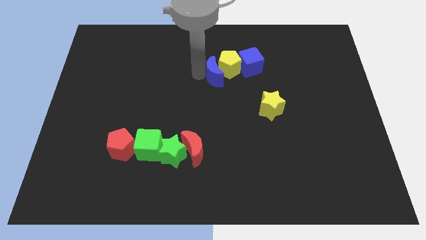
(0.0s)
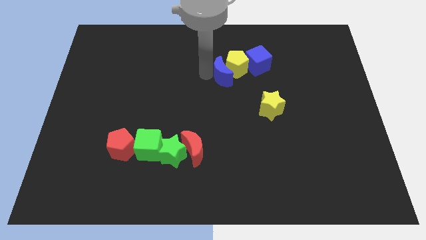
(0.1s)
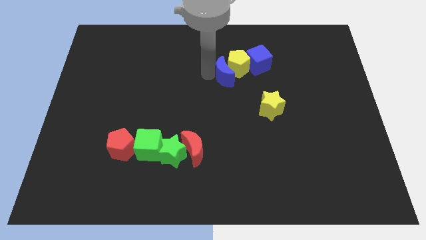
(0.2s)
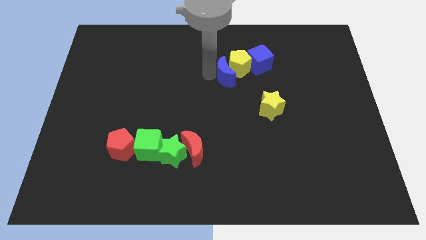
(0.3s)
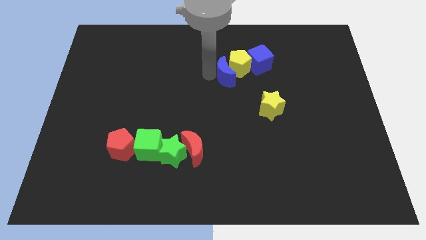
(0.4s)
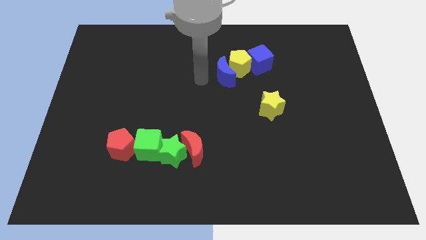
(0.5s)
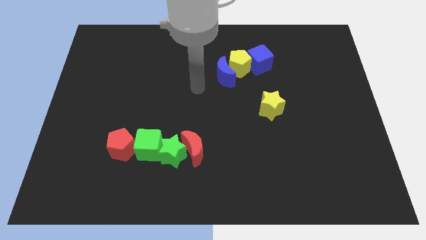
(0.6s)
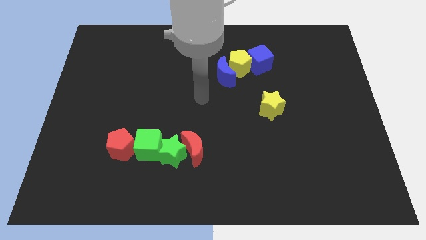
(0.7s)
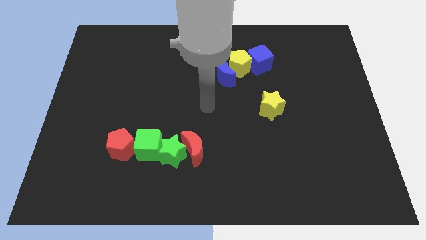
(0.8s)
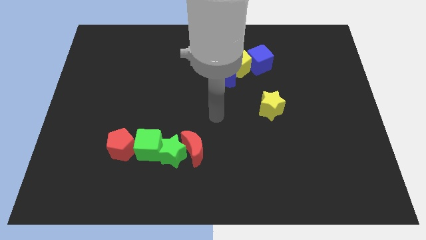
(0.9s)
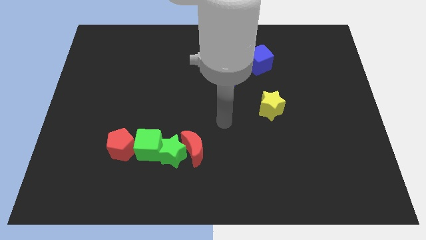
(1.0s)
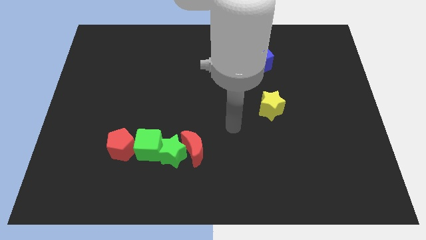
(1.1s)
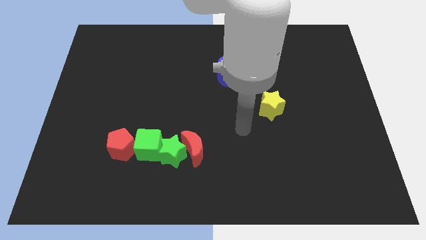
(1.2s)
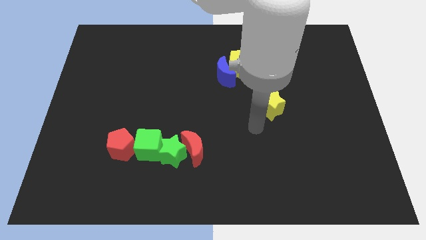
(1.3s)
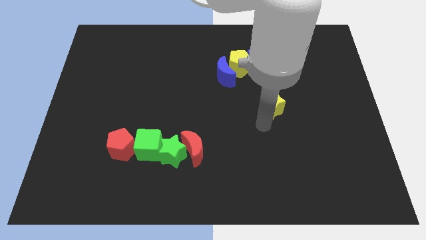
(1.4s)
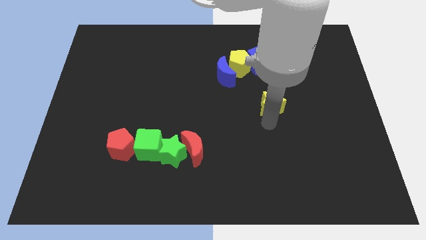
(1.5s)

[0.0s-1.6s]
point your arm to the bottom of the yellow star

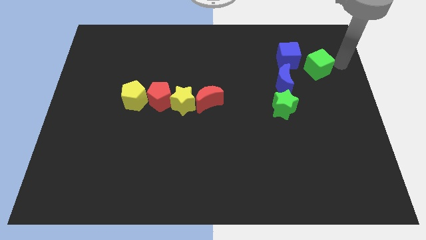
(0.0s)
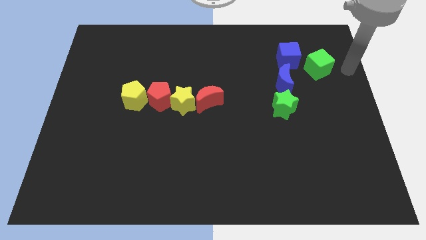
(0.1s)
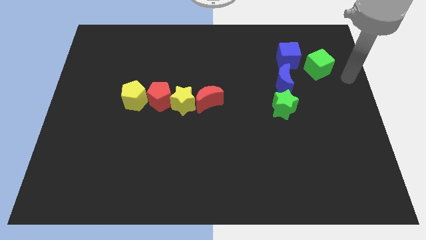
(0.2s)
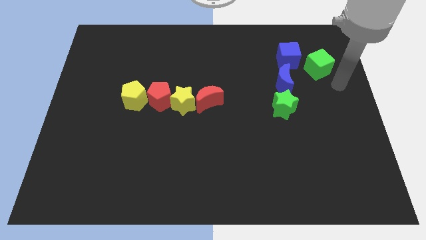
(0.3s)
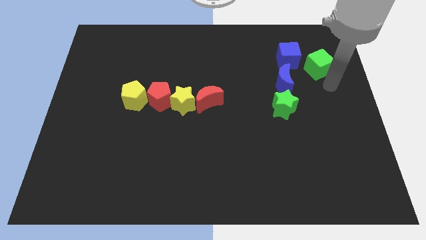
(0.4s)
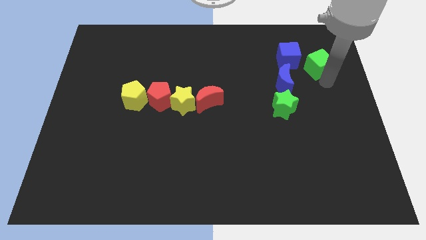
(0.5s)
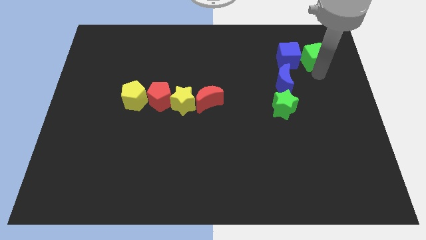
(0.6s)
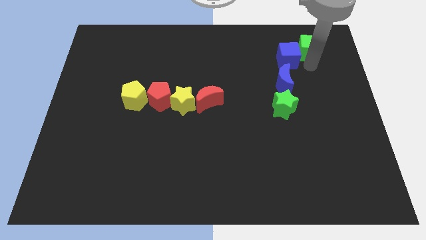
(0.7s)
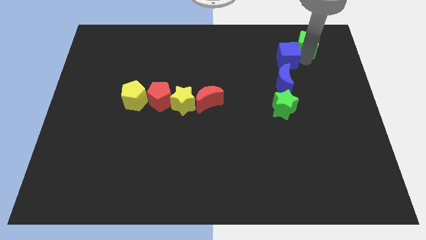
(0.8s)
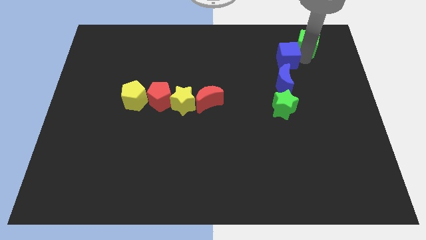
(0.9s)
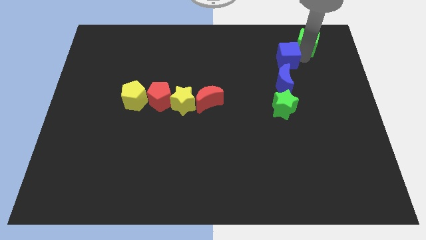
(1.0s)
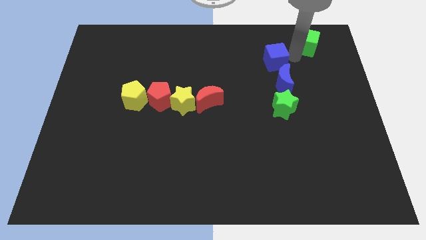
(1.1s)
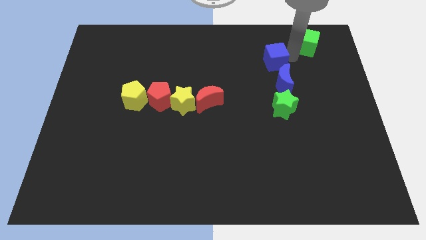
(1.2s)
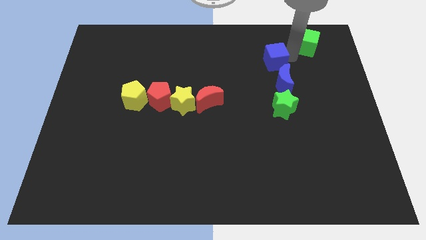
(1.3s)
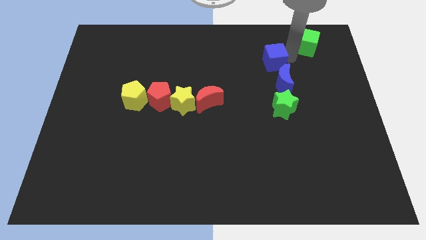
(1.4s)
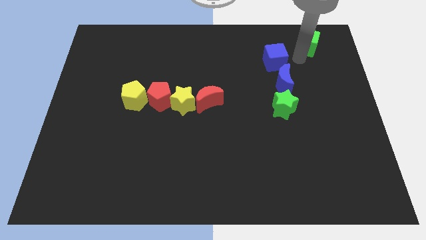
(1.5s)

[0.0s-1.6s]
slightly push the green cube towards the top left of the board

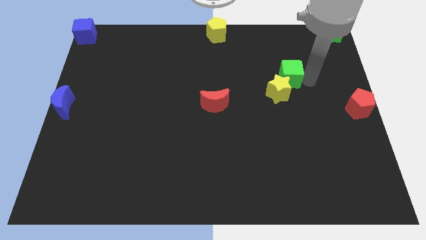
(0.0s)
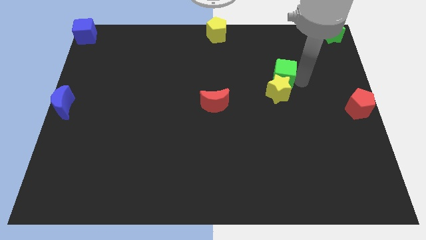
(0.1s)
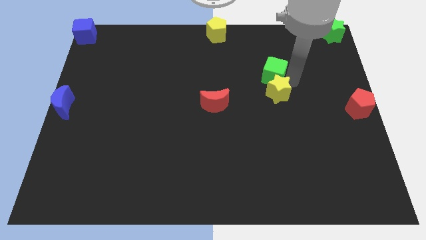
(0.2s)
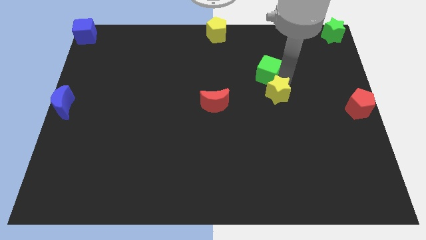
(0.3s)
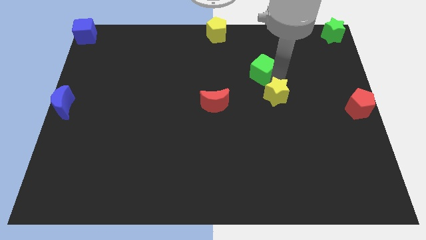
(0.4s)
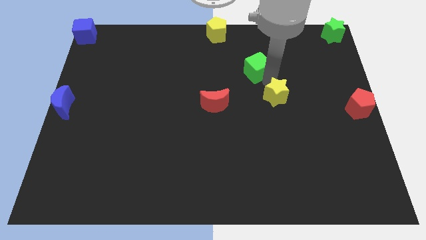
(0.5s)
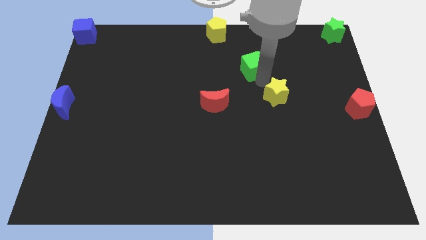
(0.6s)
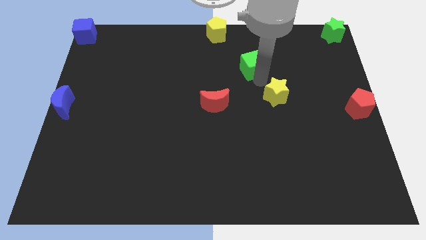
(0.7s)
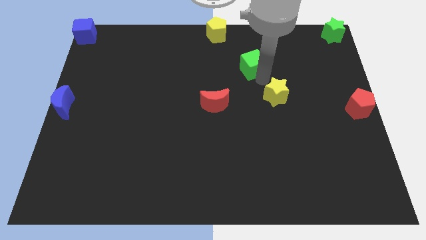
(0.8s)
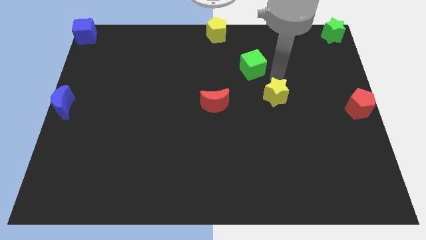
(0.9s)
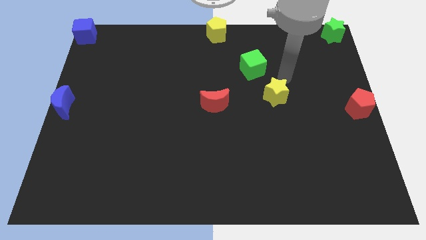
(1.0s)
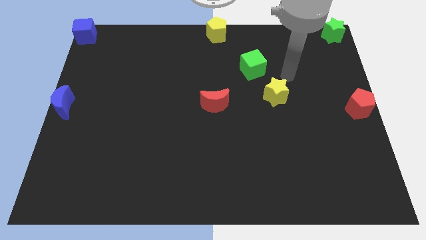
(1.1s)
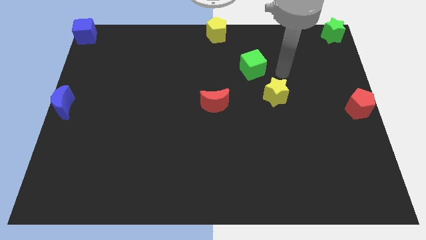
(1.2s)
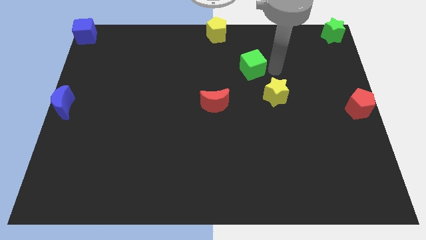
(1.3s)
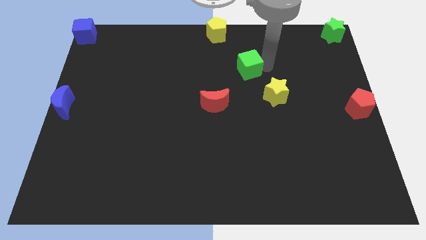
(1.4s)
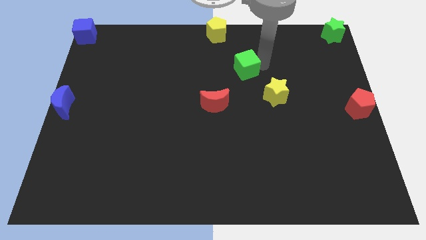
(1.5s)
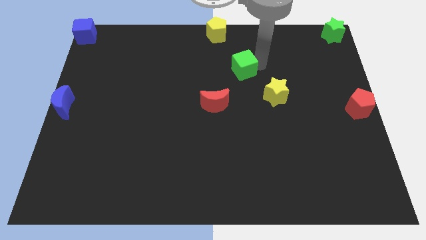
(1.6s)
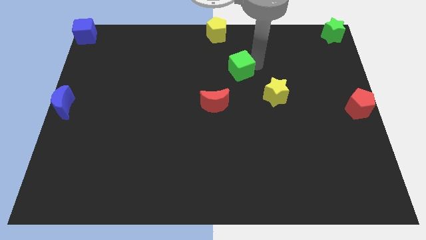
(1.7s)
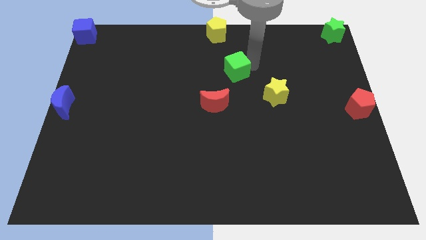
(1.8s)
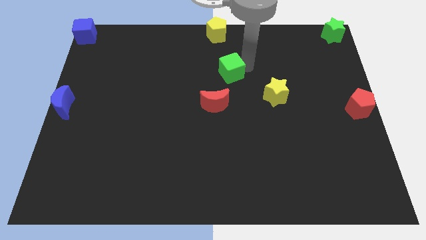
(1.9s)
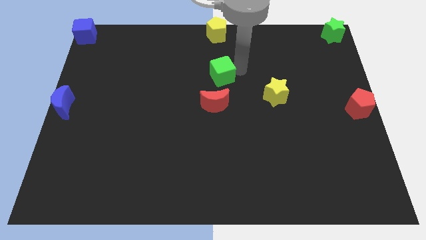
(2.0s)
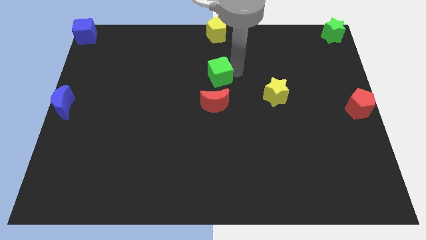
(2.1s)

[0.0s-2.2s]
move the green cube to the top of the red crescent

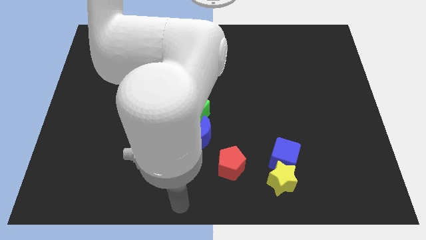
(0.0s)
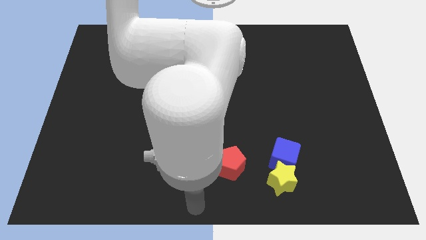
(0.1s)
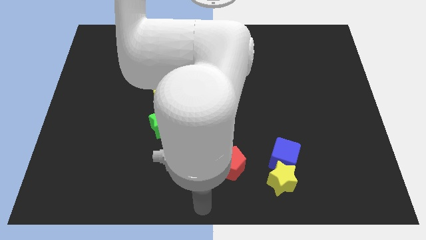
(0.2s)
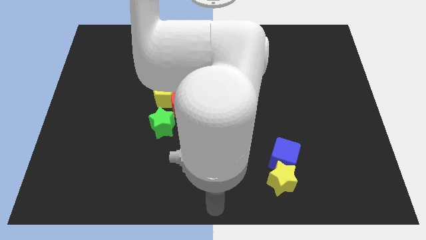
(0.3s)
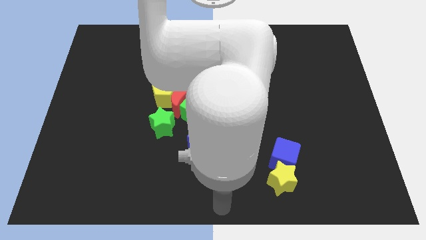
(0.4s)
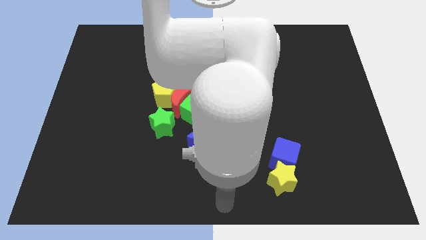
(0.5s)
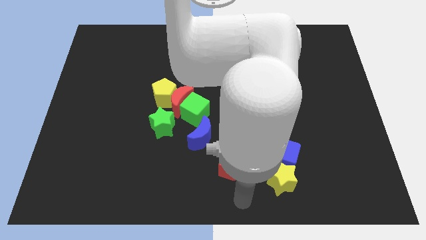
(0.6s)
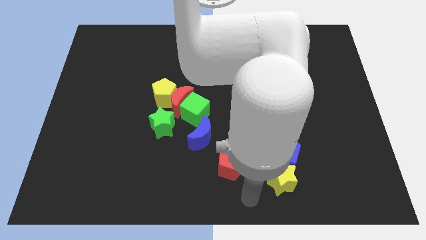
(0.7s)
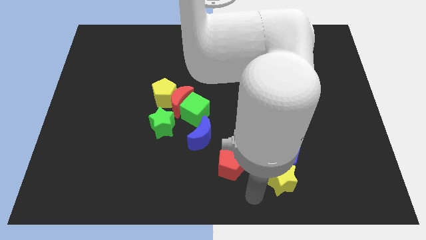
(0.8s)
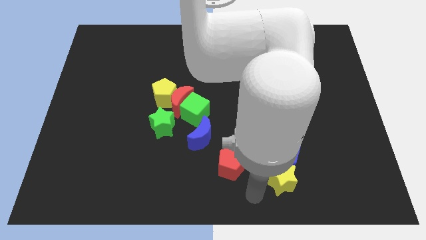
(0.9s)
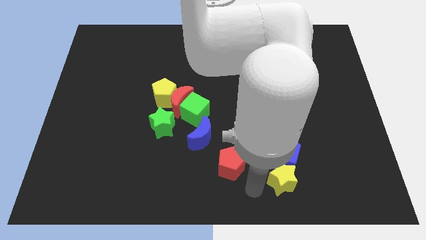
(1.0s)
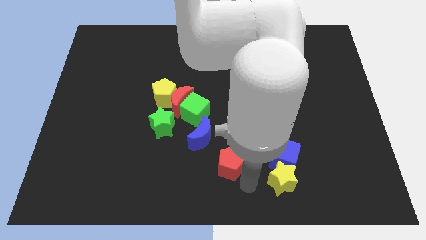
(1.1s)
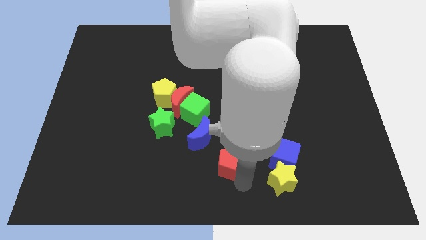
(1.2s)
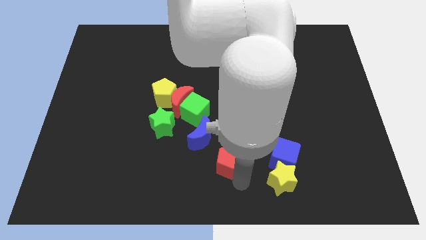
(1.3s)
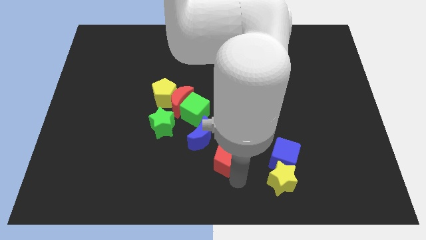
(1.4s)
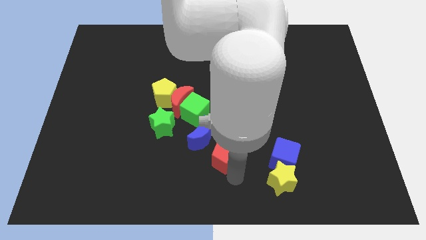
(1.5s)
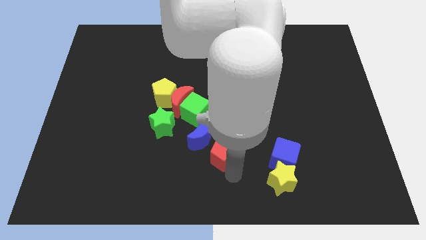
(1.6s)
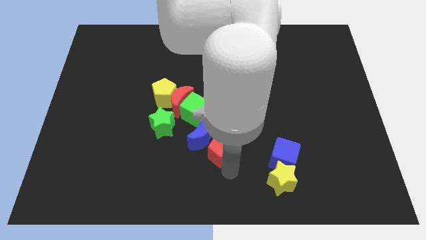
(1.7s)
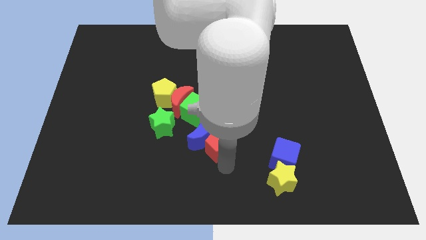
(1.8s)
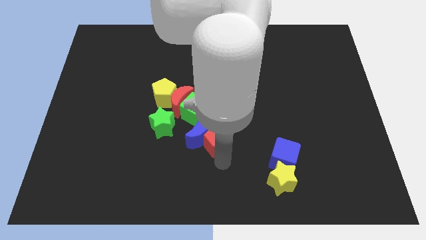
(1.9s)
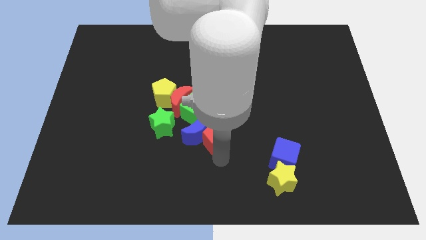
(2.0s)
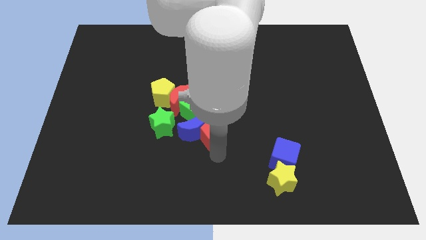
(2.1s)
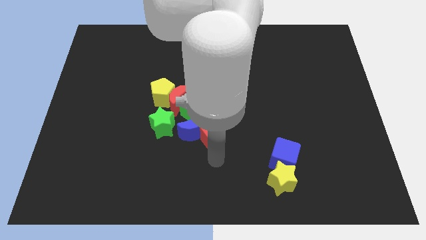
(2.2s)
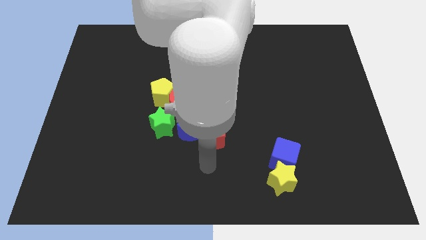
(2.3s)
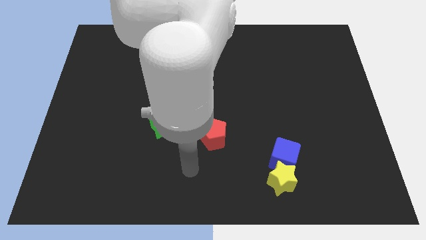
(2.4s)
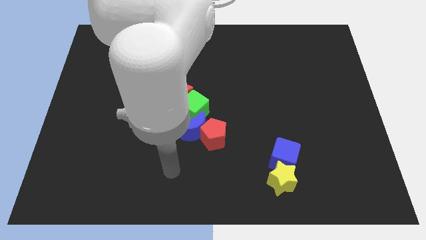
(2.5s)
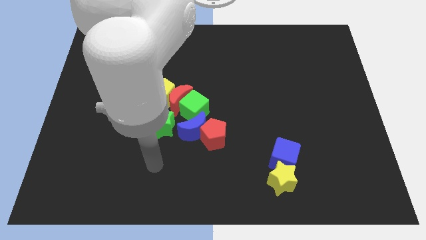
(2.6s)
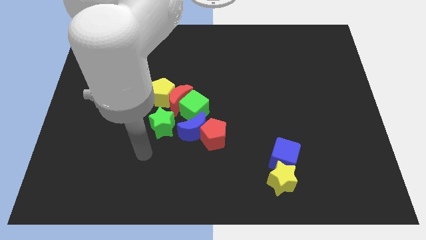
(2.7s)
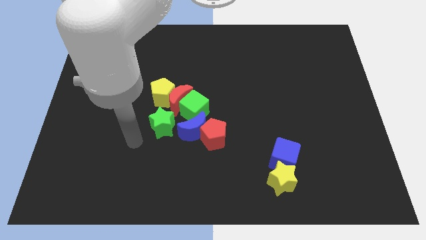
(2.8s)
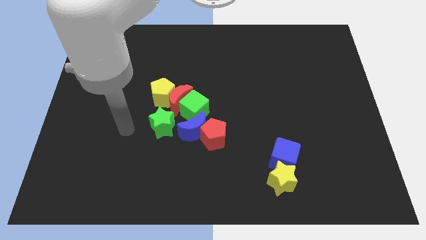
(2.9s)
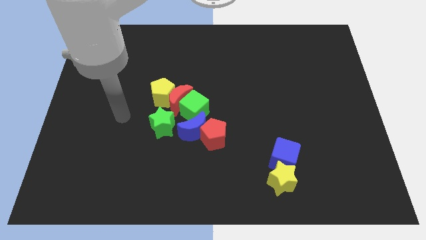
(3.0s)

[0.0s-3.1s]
move red pentagon with blue moon into green cube

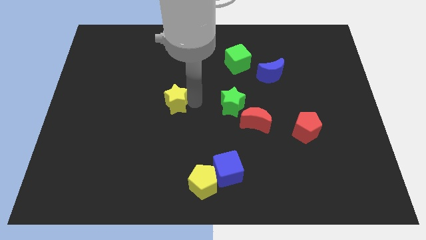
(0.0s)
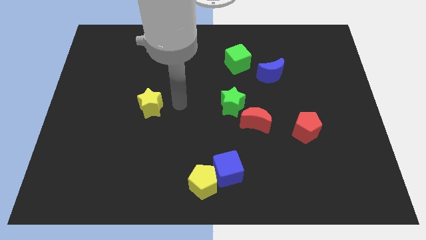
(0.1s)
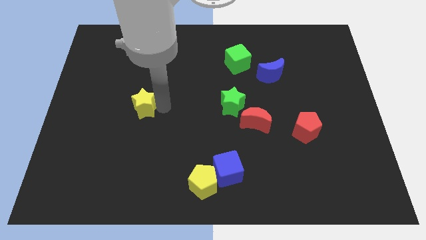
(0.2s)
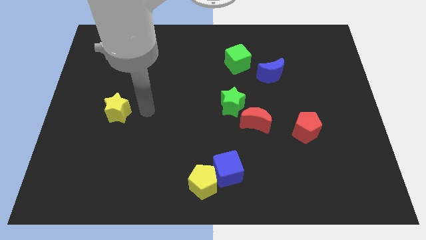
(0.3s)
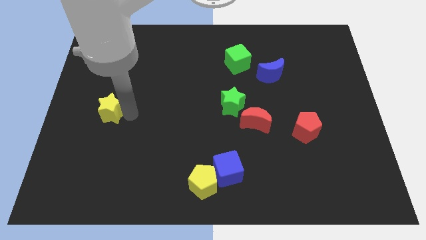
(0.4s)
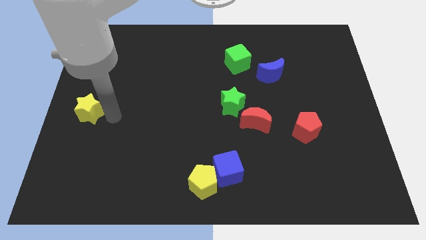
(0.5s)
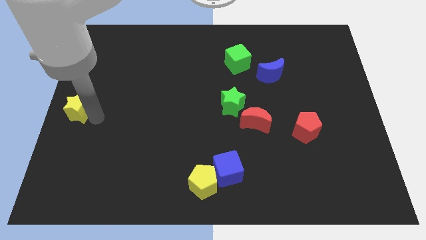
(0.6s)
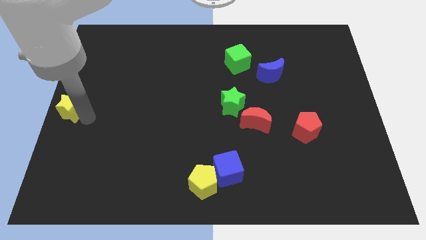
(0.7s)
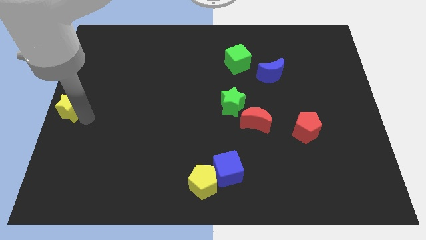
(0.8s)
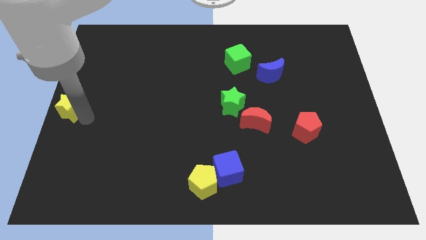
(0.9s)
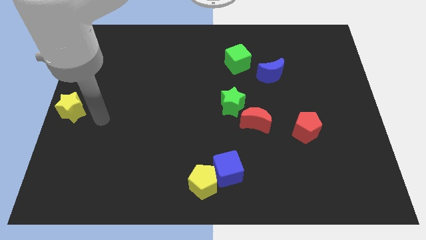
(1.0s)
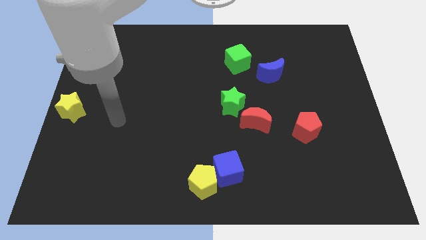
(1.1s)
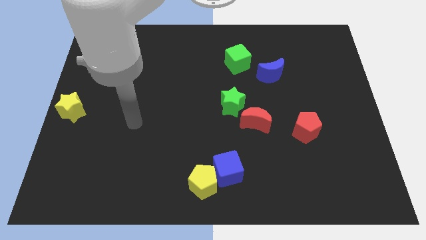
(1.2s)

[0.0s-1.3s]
put the yellow star at the center left
